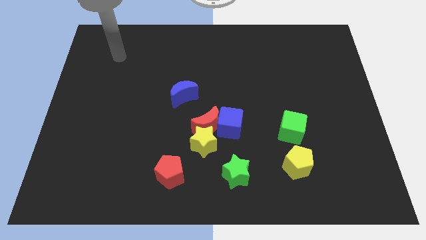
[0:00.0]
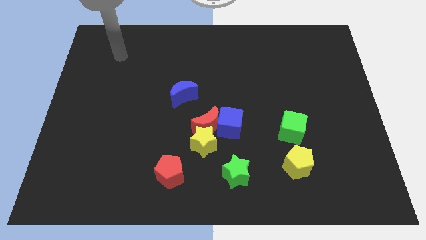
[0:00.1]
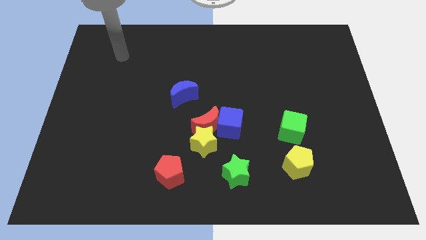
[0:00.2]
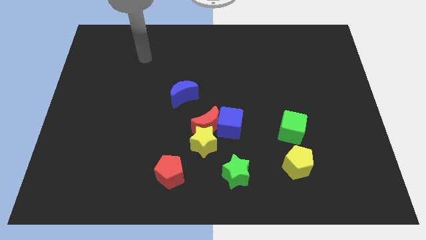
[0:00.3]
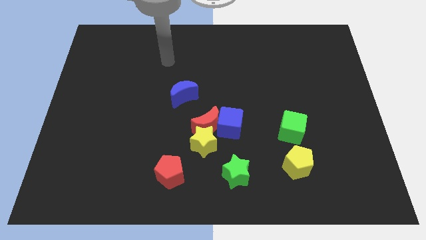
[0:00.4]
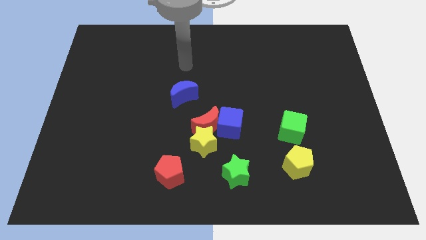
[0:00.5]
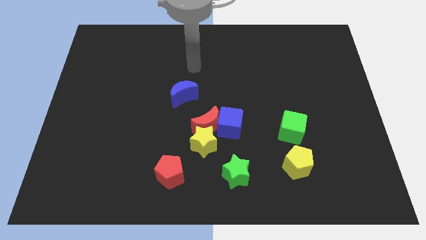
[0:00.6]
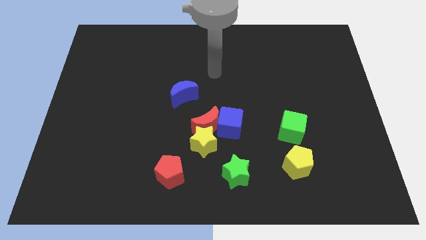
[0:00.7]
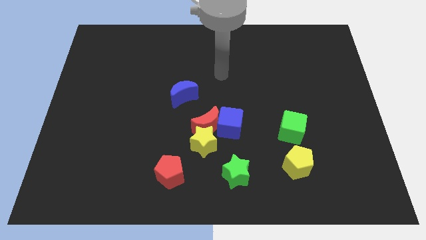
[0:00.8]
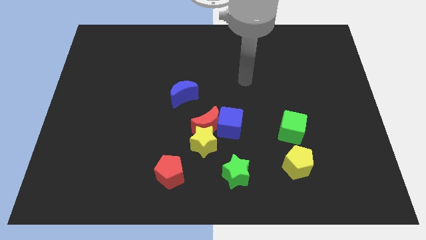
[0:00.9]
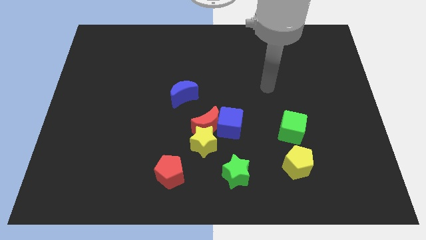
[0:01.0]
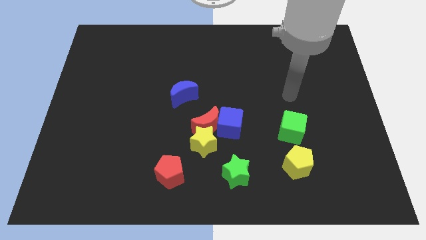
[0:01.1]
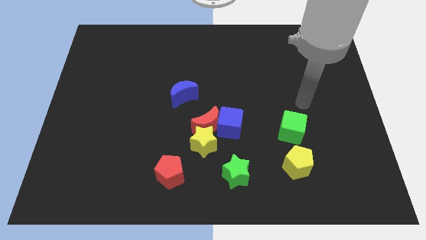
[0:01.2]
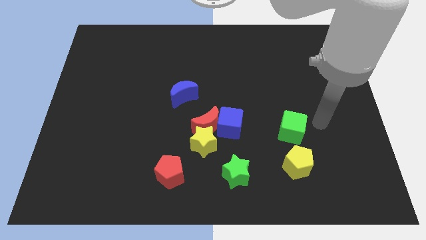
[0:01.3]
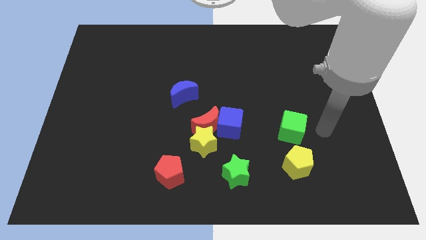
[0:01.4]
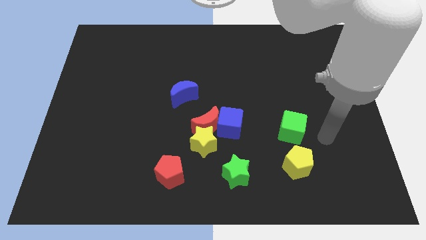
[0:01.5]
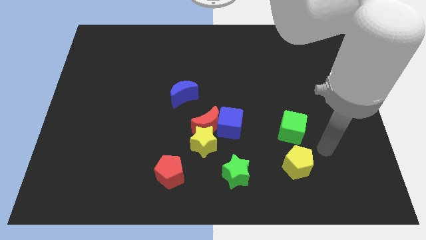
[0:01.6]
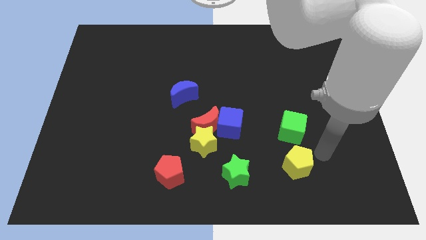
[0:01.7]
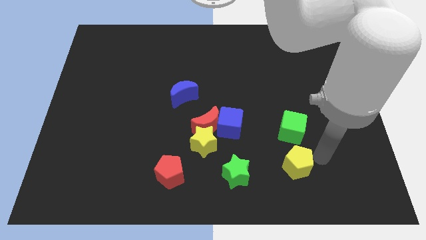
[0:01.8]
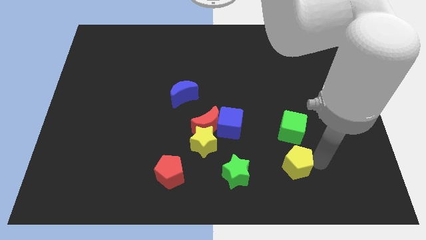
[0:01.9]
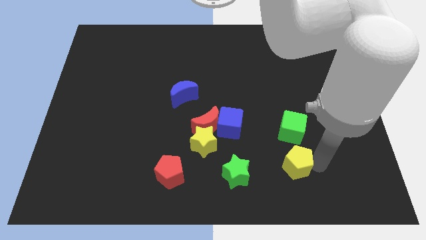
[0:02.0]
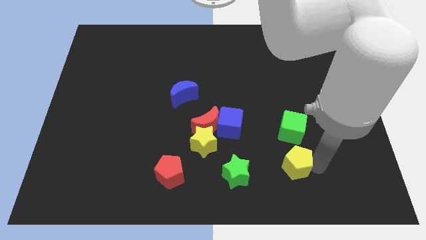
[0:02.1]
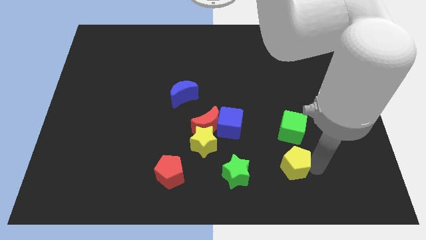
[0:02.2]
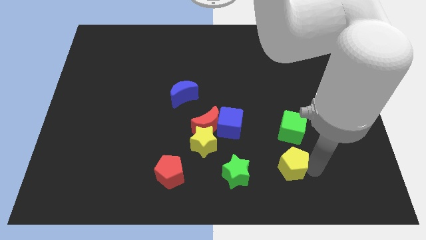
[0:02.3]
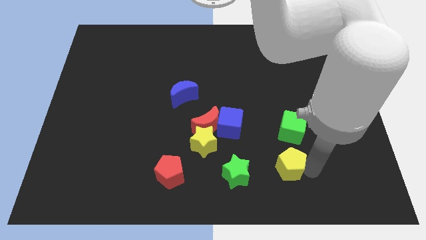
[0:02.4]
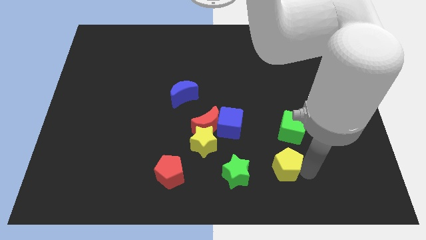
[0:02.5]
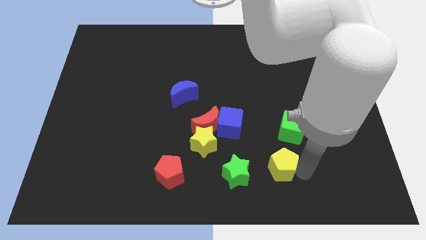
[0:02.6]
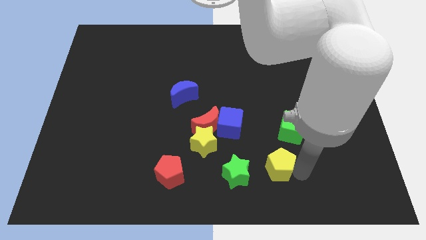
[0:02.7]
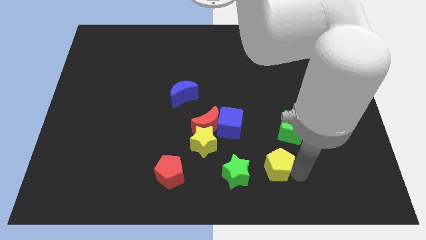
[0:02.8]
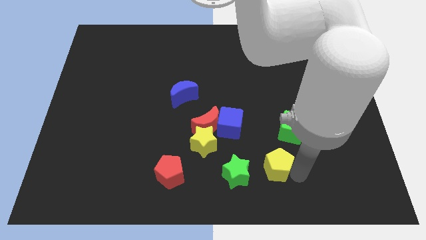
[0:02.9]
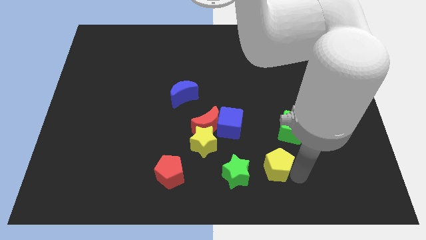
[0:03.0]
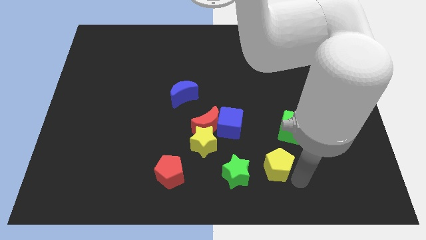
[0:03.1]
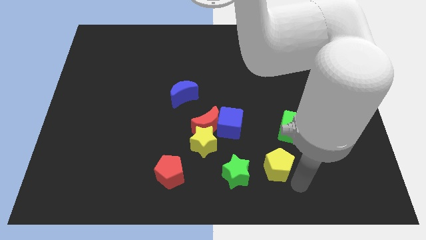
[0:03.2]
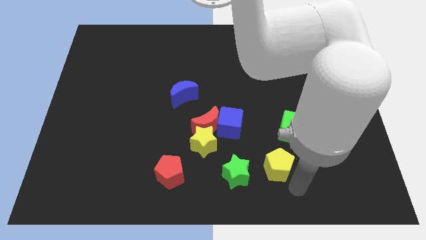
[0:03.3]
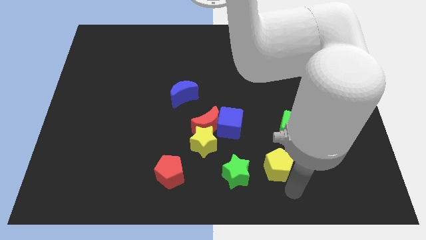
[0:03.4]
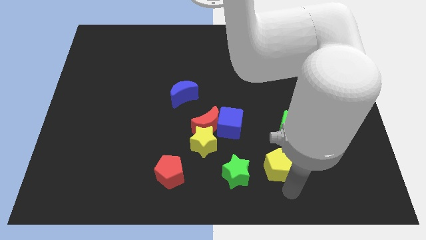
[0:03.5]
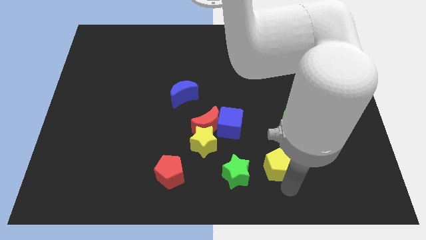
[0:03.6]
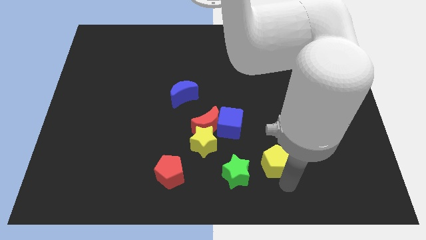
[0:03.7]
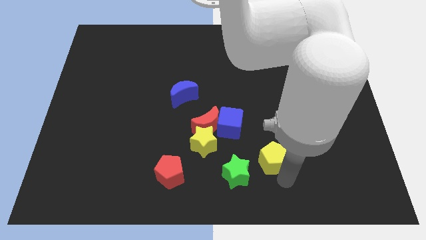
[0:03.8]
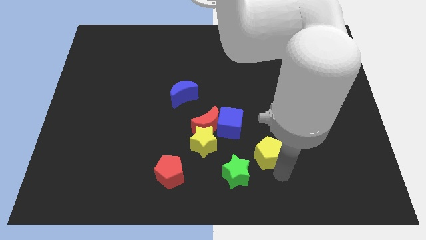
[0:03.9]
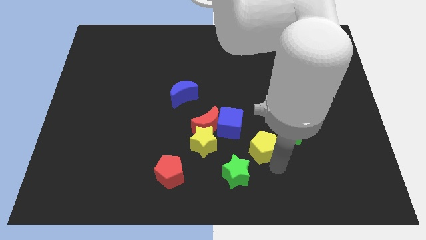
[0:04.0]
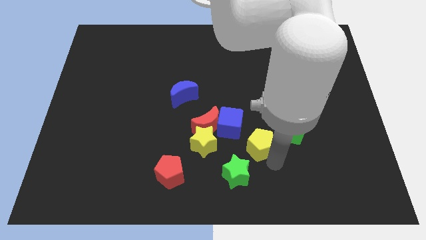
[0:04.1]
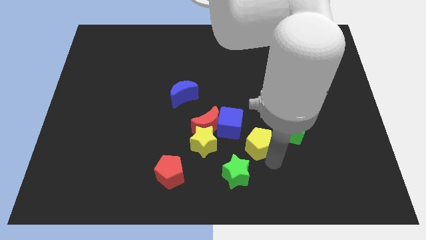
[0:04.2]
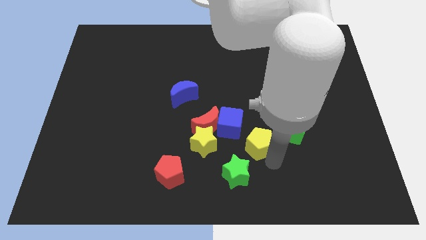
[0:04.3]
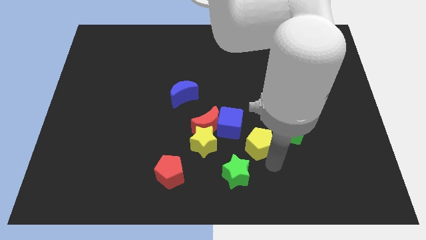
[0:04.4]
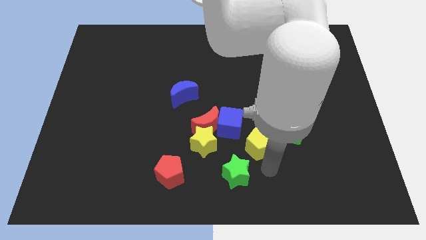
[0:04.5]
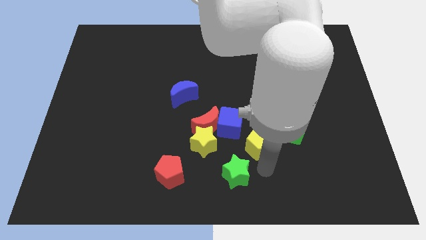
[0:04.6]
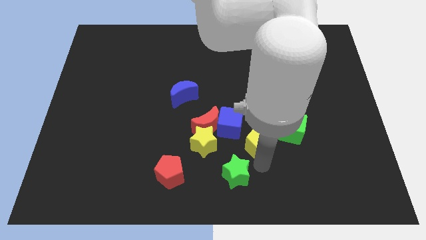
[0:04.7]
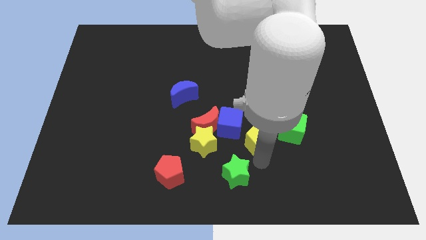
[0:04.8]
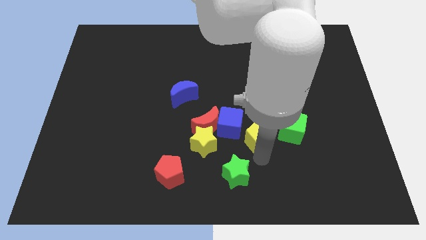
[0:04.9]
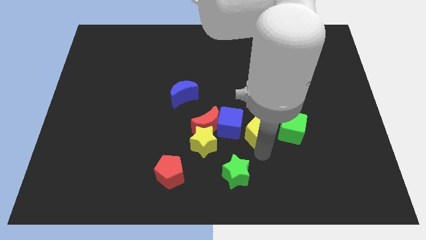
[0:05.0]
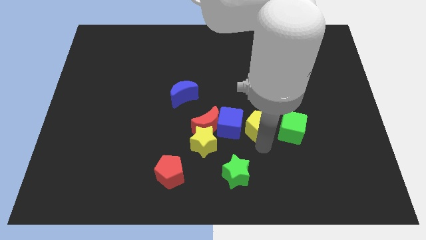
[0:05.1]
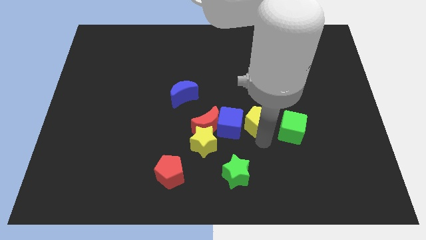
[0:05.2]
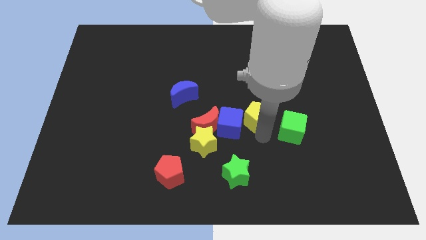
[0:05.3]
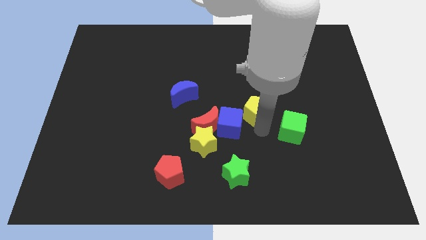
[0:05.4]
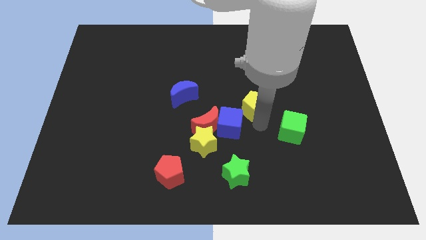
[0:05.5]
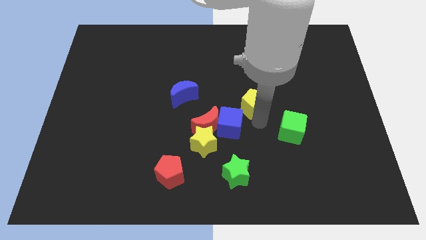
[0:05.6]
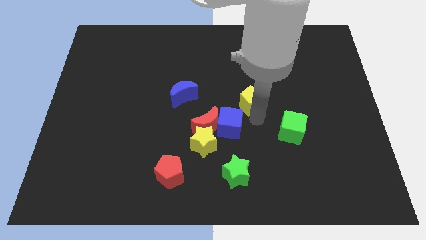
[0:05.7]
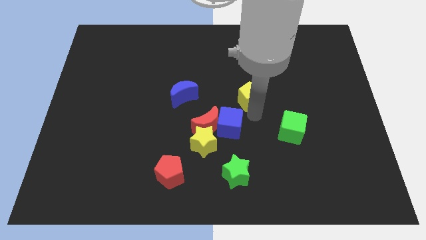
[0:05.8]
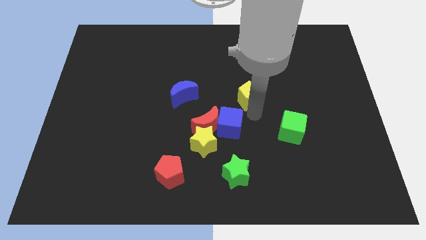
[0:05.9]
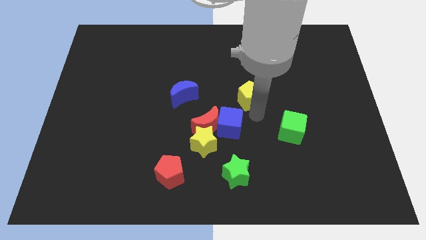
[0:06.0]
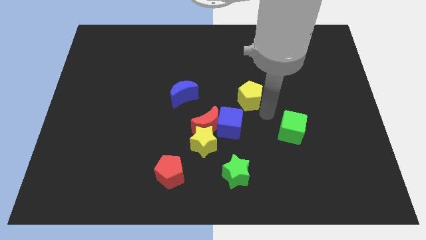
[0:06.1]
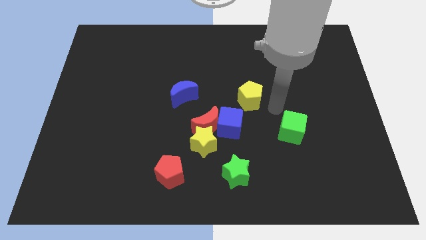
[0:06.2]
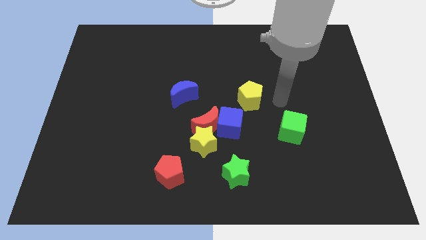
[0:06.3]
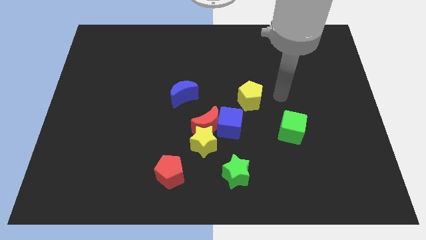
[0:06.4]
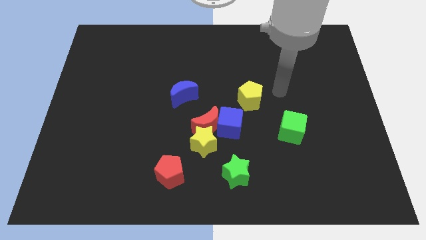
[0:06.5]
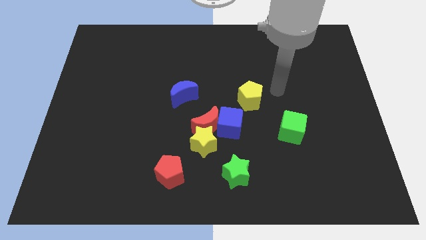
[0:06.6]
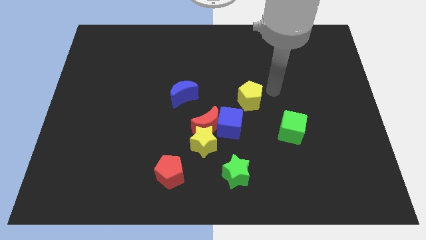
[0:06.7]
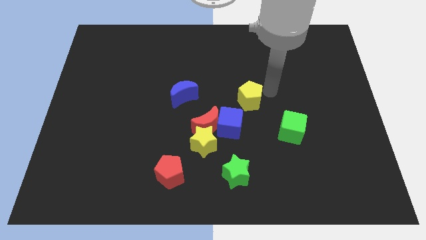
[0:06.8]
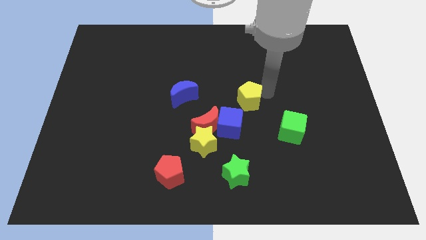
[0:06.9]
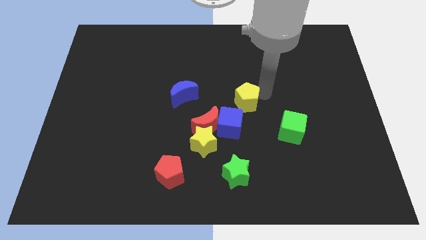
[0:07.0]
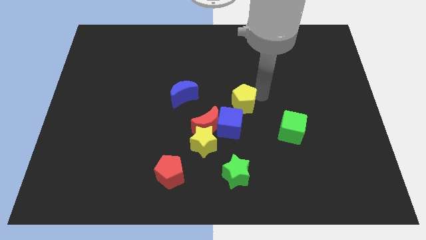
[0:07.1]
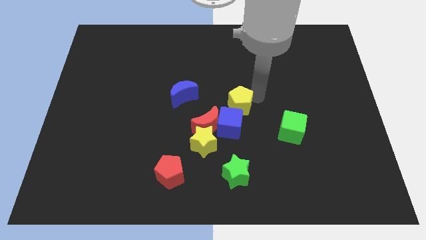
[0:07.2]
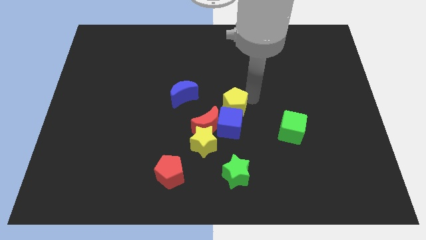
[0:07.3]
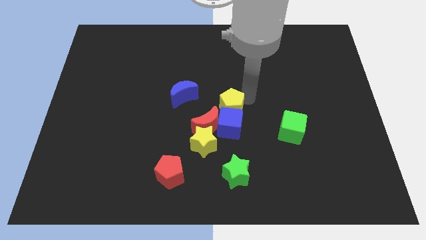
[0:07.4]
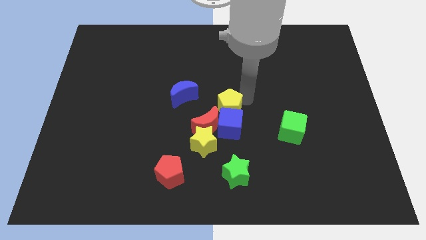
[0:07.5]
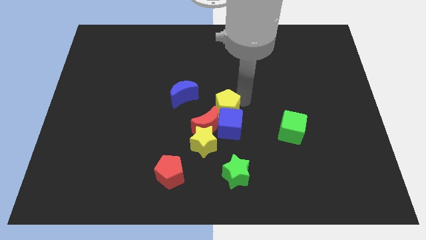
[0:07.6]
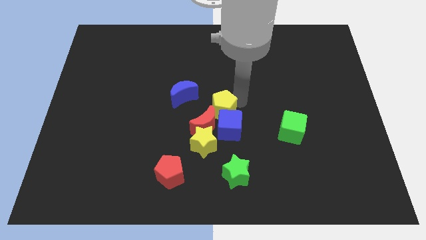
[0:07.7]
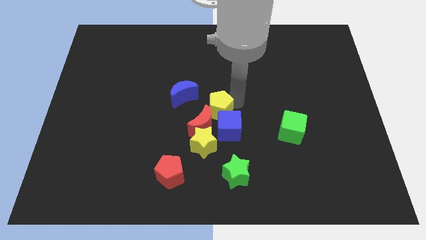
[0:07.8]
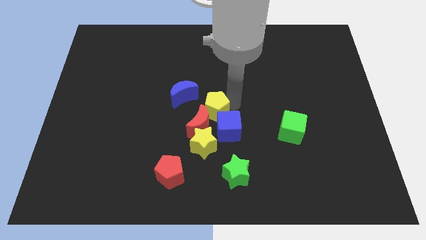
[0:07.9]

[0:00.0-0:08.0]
move the yellow pentagon to the red moon

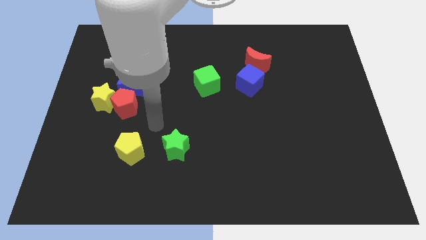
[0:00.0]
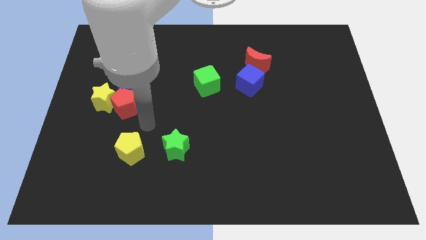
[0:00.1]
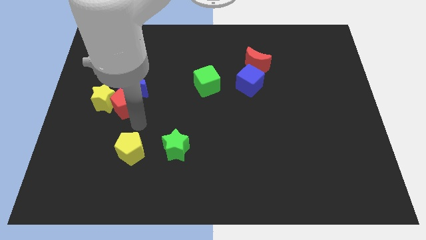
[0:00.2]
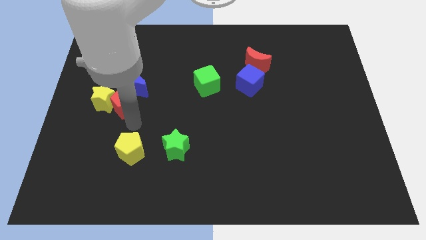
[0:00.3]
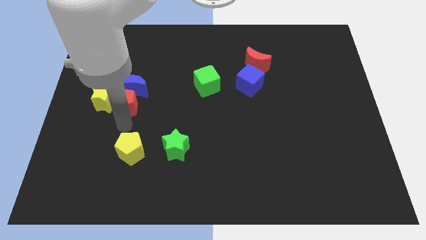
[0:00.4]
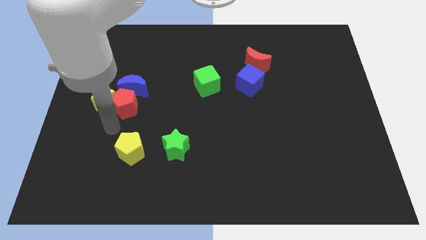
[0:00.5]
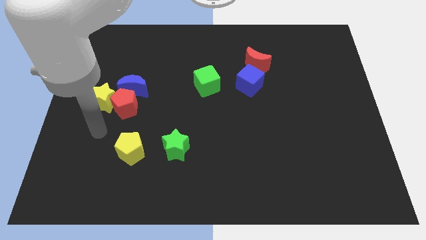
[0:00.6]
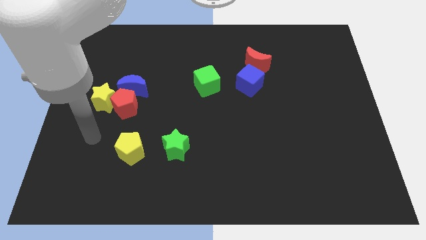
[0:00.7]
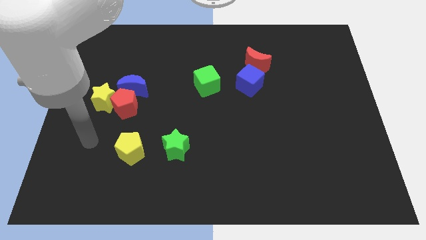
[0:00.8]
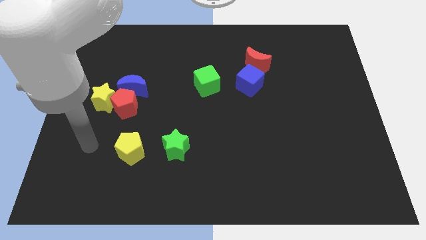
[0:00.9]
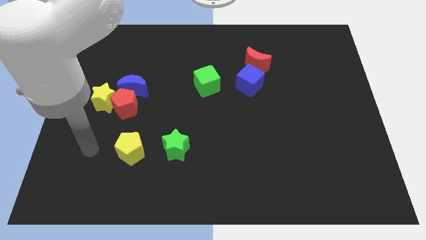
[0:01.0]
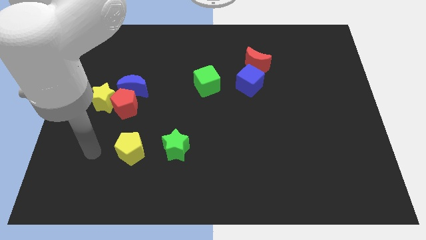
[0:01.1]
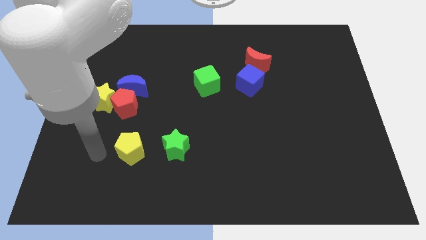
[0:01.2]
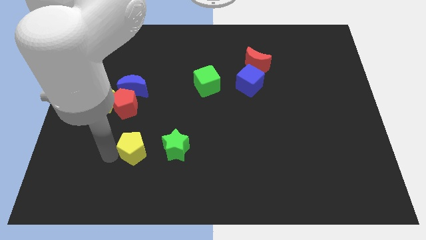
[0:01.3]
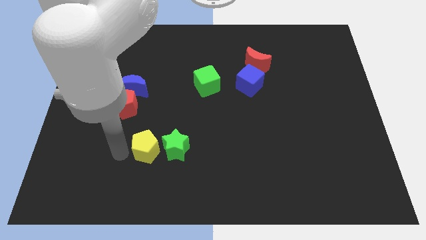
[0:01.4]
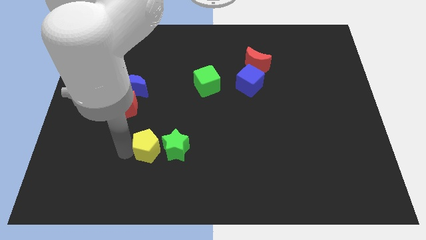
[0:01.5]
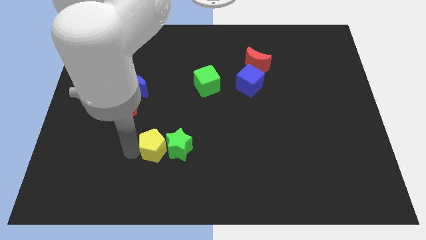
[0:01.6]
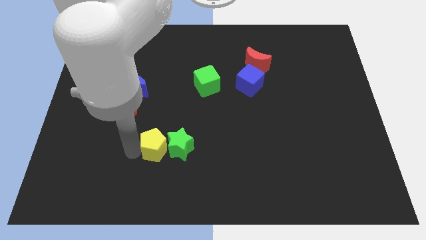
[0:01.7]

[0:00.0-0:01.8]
move the yellow pentagon close to the green star
